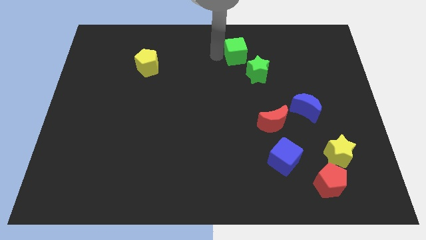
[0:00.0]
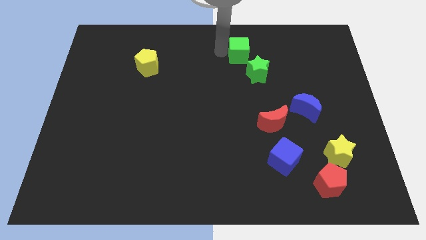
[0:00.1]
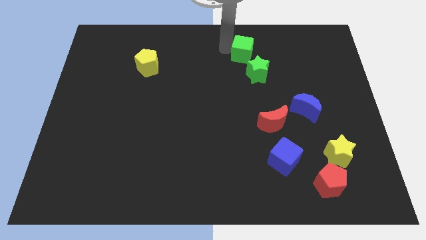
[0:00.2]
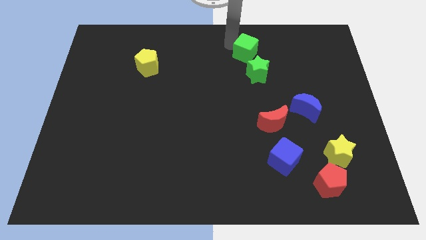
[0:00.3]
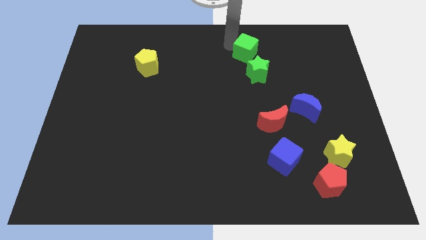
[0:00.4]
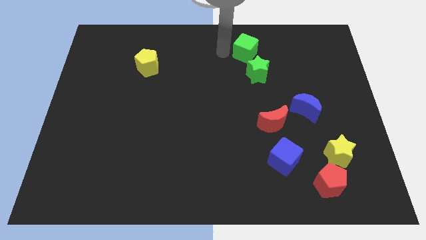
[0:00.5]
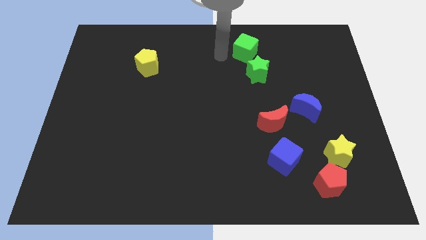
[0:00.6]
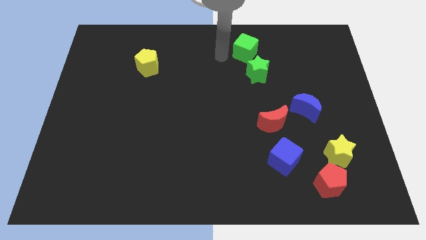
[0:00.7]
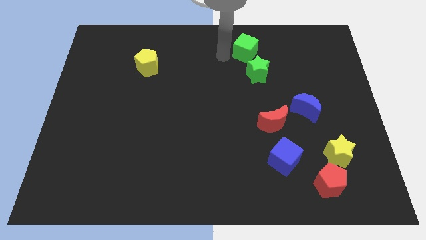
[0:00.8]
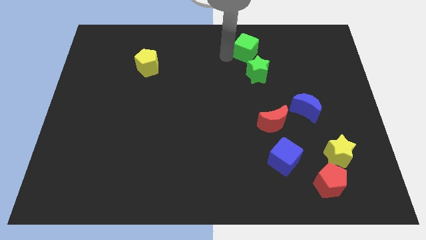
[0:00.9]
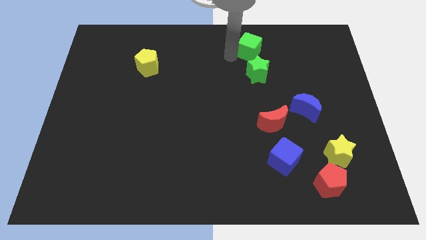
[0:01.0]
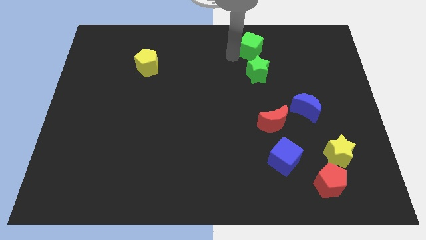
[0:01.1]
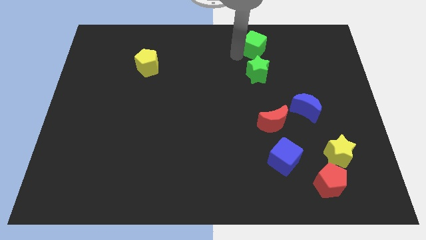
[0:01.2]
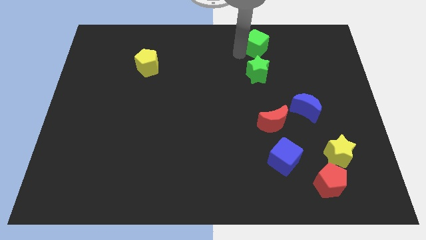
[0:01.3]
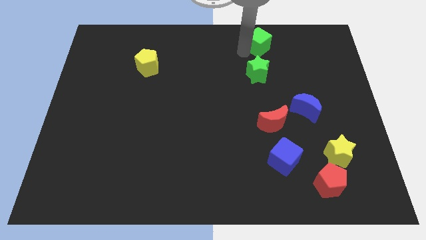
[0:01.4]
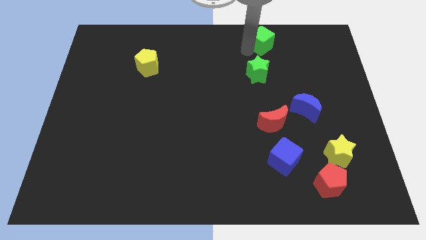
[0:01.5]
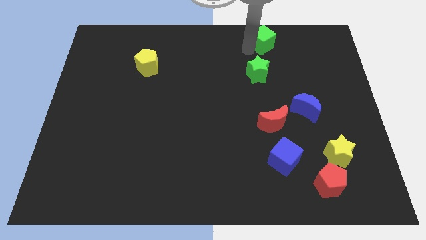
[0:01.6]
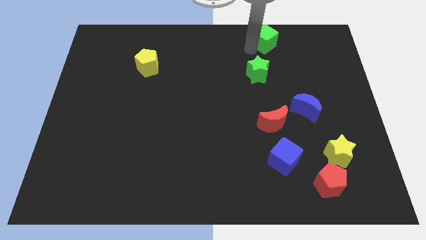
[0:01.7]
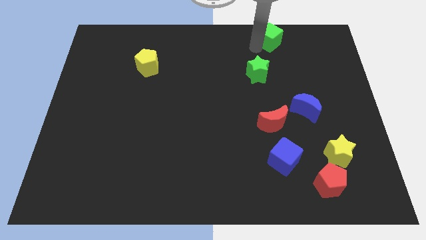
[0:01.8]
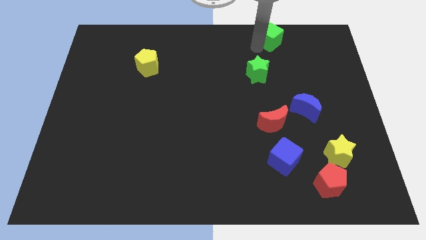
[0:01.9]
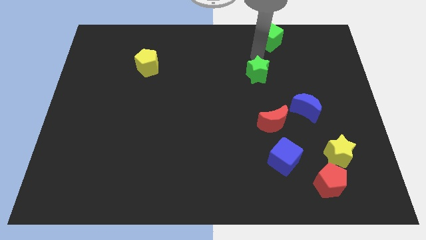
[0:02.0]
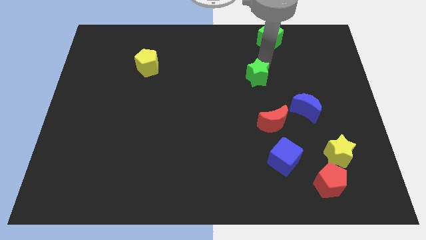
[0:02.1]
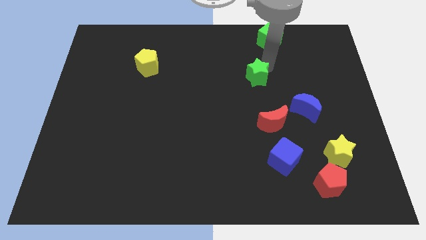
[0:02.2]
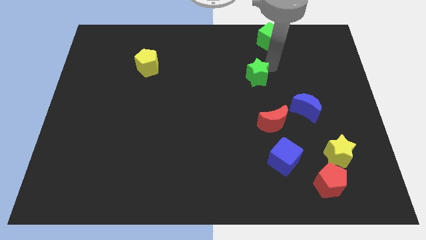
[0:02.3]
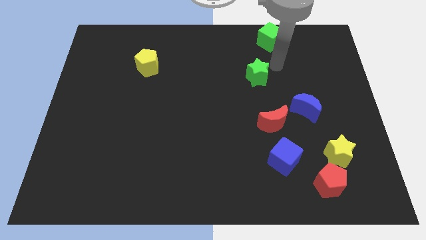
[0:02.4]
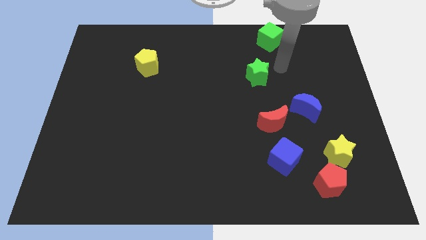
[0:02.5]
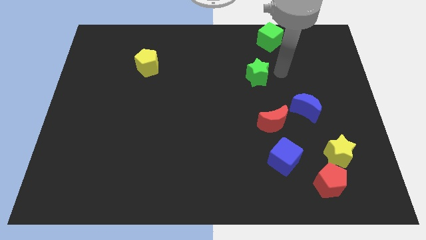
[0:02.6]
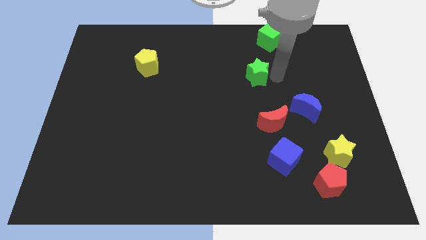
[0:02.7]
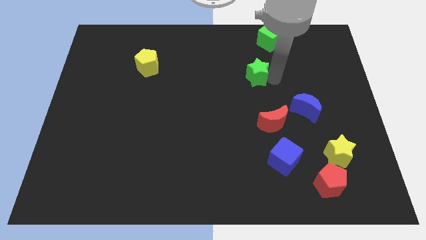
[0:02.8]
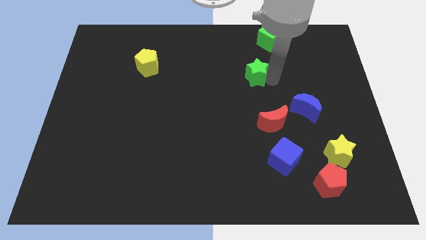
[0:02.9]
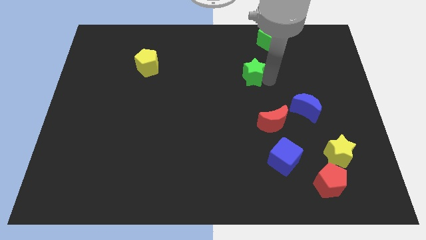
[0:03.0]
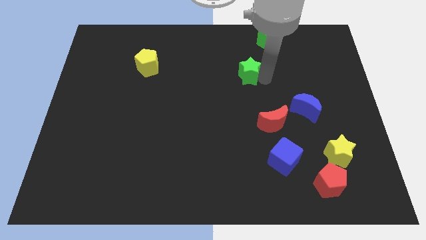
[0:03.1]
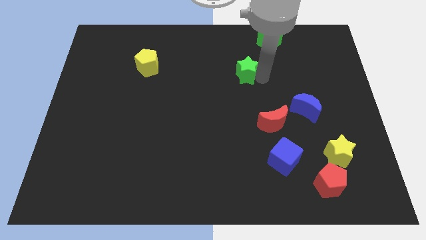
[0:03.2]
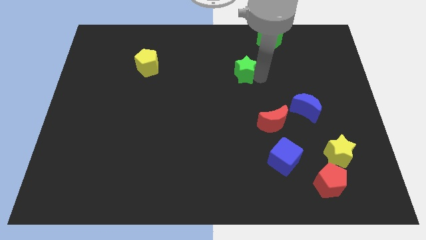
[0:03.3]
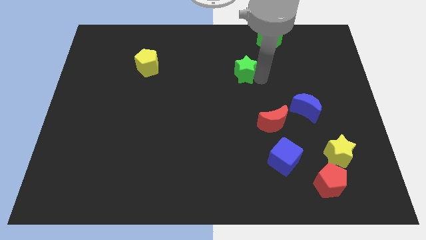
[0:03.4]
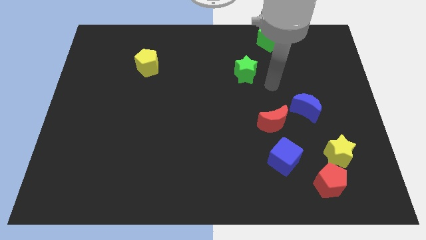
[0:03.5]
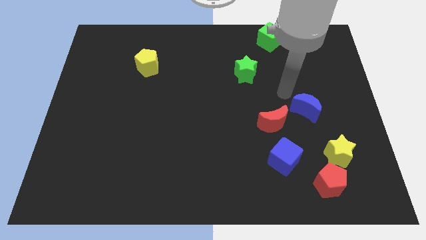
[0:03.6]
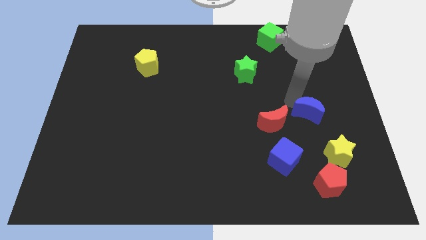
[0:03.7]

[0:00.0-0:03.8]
move the green cube towards the top center

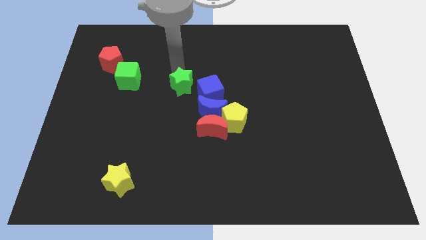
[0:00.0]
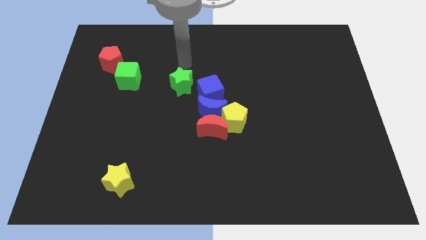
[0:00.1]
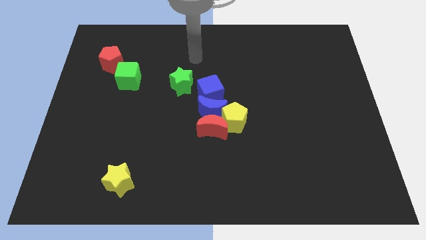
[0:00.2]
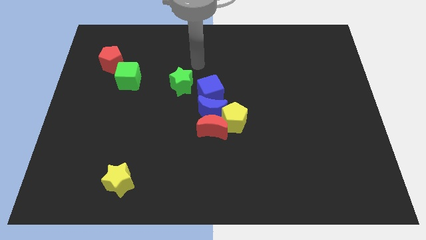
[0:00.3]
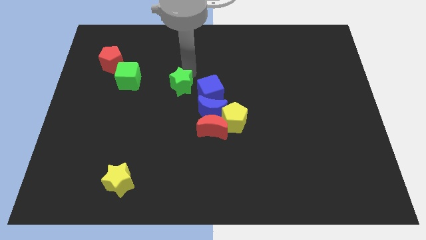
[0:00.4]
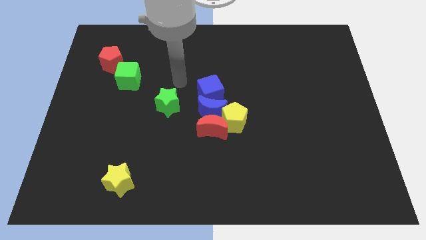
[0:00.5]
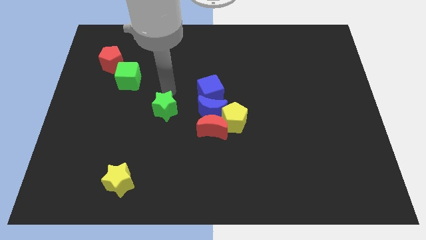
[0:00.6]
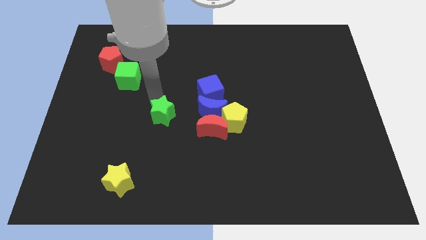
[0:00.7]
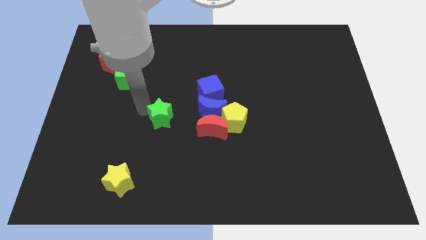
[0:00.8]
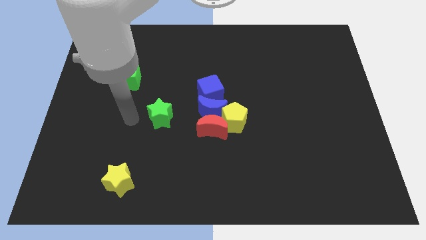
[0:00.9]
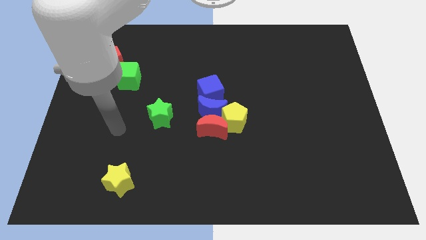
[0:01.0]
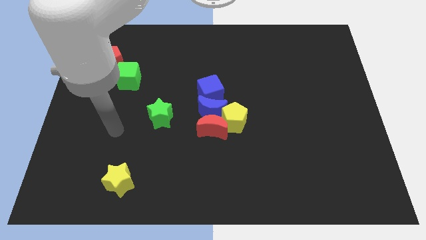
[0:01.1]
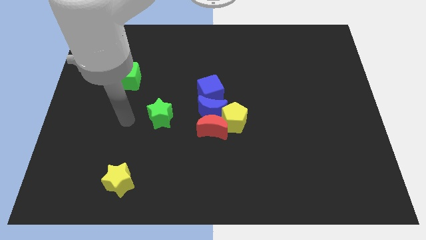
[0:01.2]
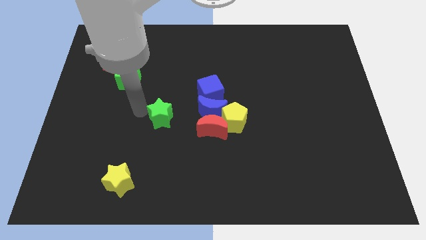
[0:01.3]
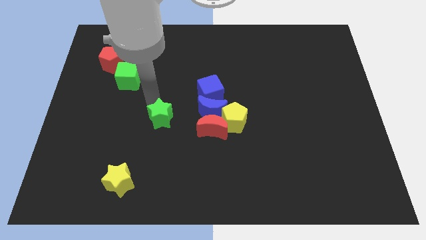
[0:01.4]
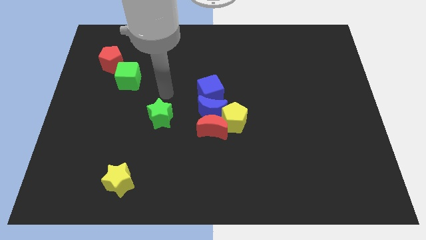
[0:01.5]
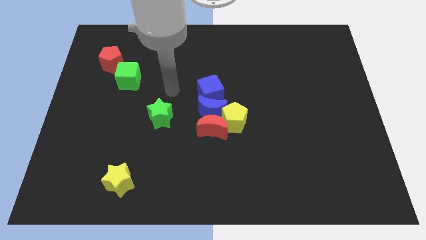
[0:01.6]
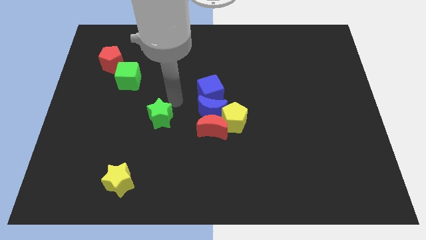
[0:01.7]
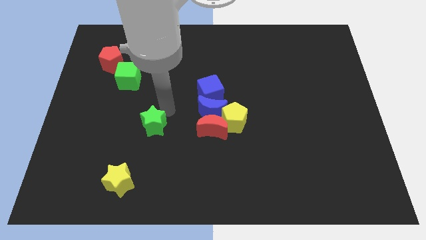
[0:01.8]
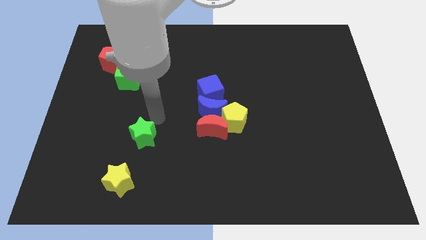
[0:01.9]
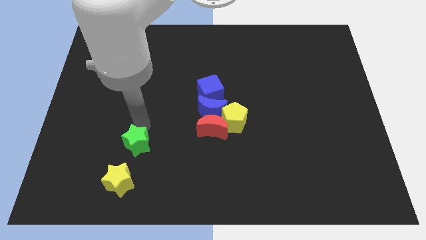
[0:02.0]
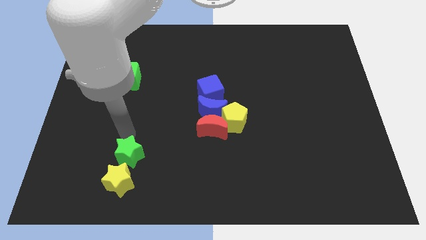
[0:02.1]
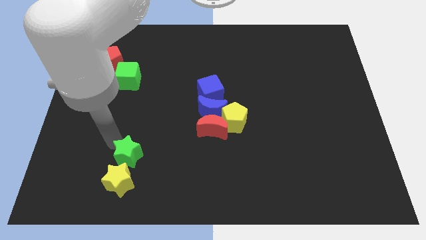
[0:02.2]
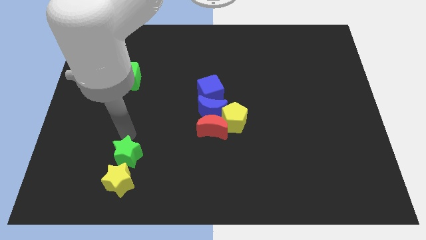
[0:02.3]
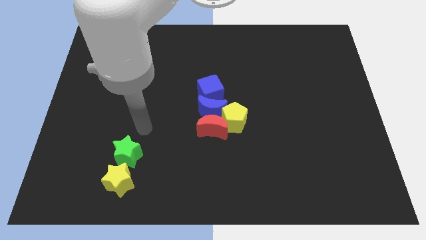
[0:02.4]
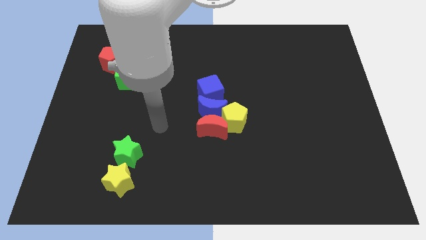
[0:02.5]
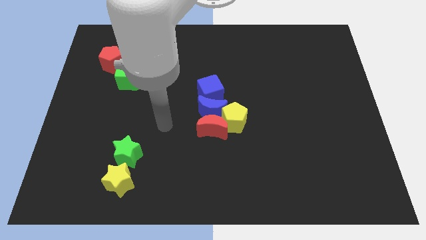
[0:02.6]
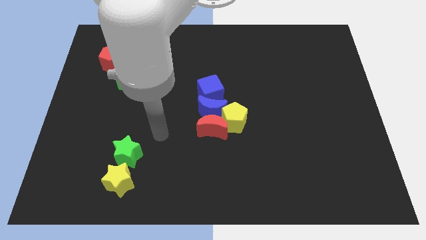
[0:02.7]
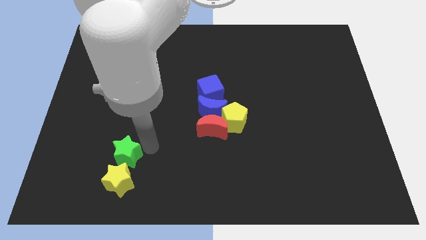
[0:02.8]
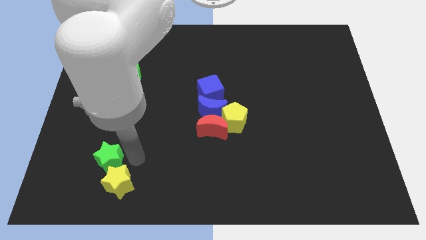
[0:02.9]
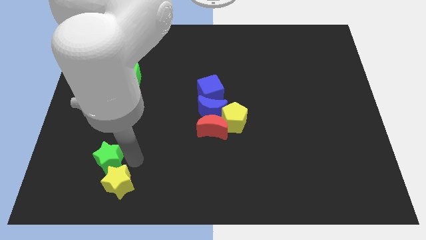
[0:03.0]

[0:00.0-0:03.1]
put the green star into yellow star diagonally

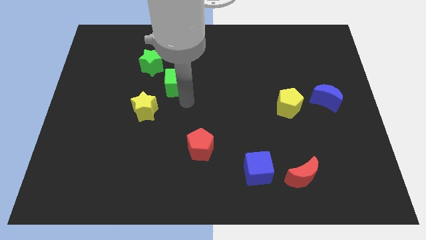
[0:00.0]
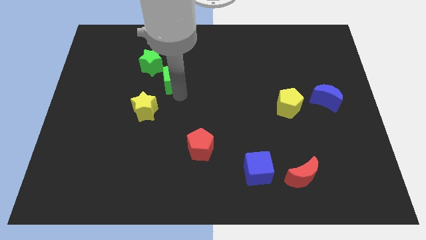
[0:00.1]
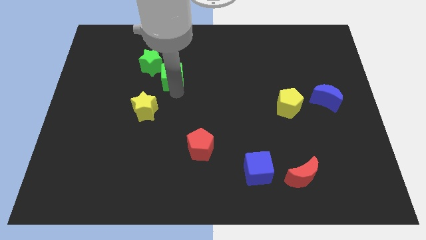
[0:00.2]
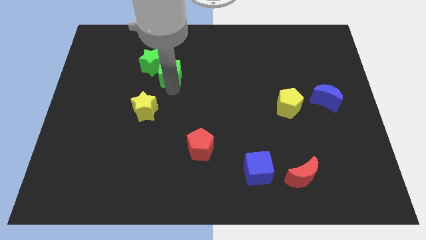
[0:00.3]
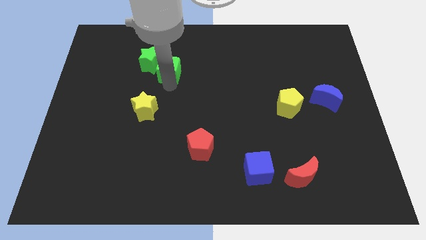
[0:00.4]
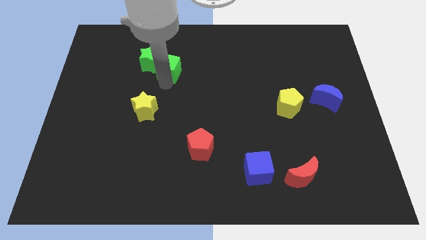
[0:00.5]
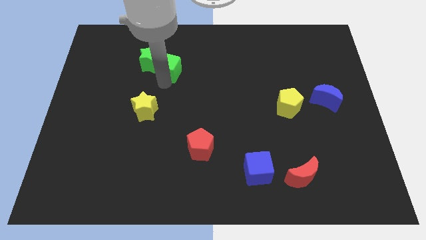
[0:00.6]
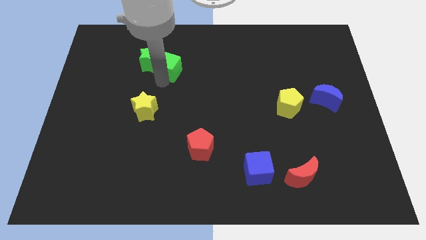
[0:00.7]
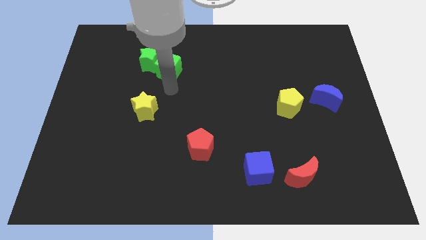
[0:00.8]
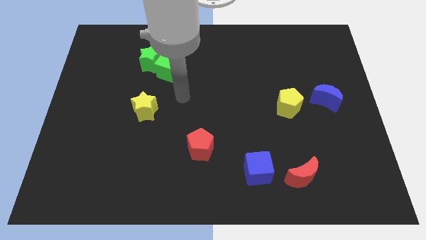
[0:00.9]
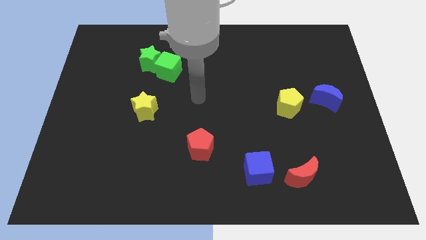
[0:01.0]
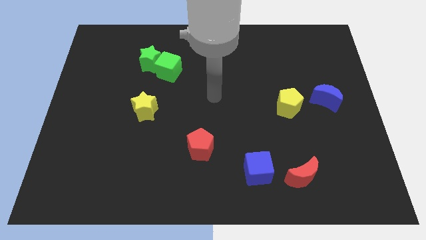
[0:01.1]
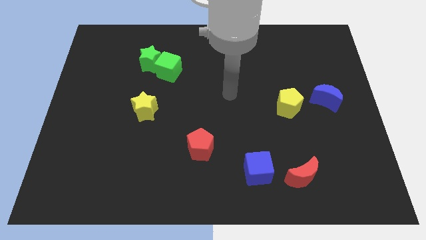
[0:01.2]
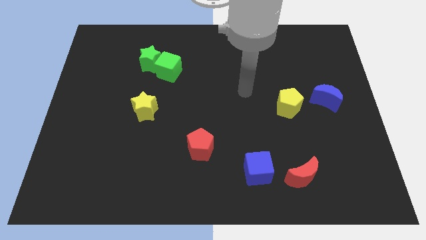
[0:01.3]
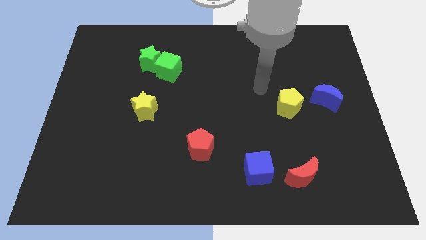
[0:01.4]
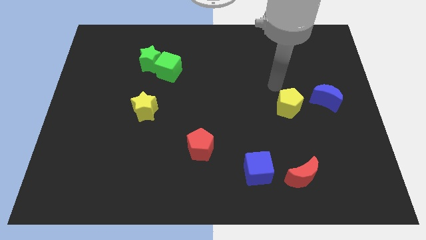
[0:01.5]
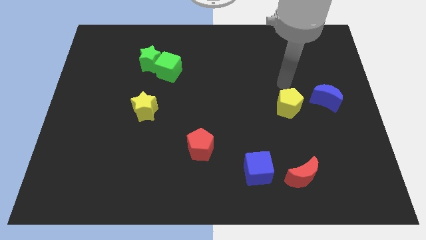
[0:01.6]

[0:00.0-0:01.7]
move the green cube close to green star

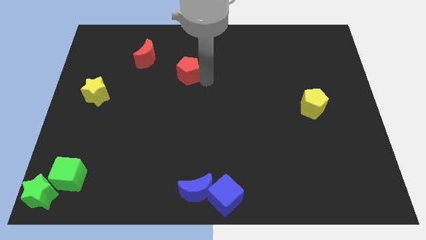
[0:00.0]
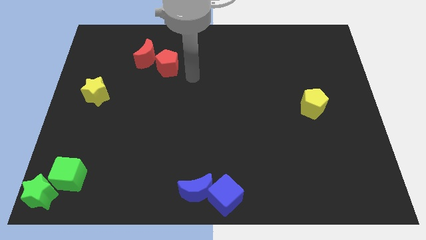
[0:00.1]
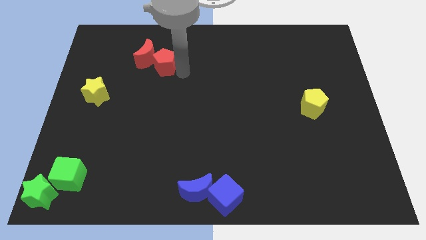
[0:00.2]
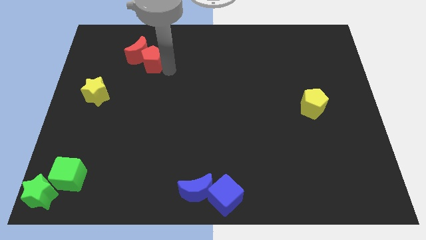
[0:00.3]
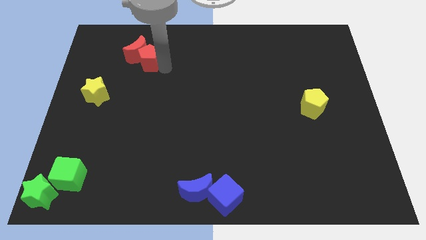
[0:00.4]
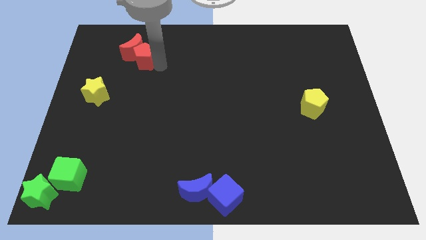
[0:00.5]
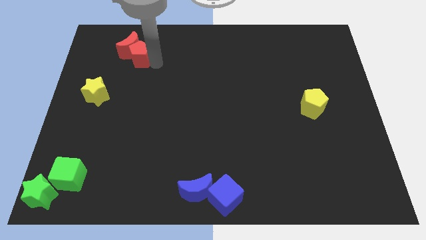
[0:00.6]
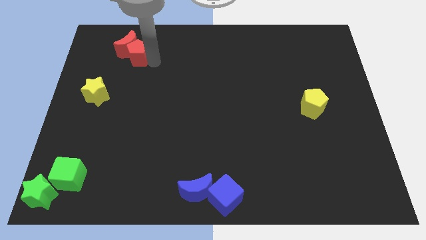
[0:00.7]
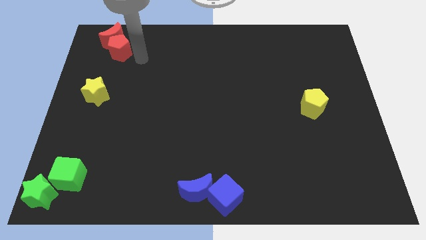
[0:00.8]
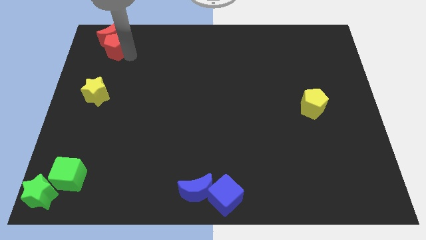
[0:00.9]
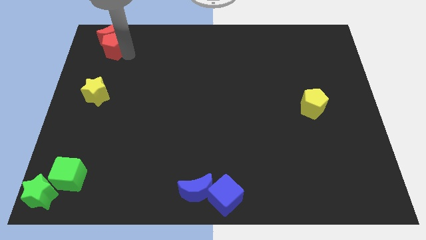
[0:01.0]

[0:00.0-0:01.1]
move the group of red blocks vertically above the yellow star
